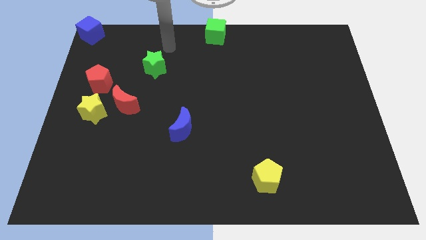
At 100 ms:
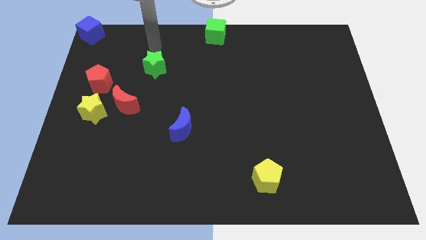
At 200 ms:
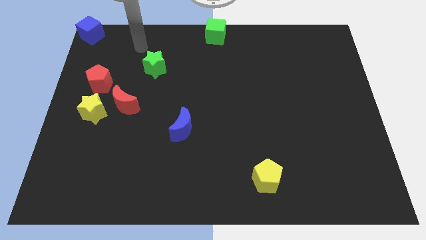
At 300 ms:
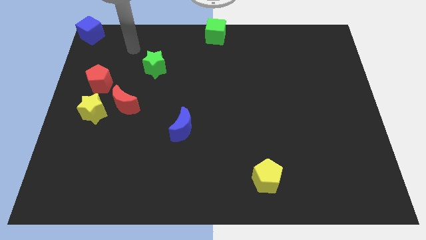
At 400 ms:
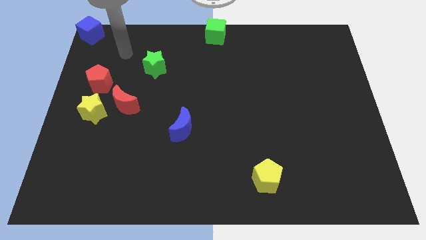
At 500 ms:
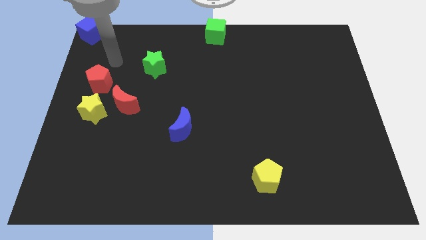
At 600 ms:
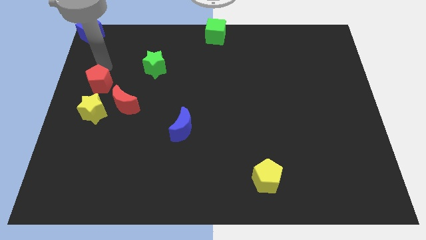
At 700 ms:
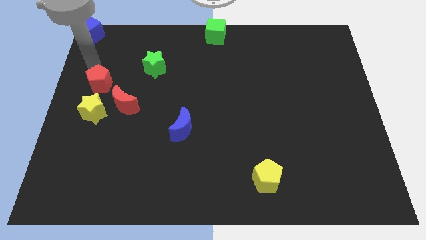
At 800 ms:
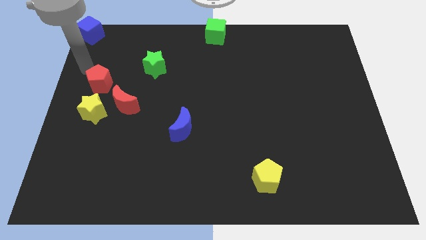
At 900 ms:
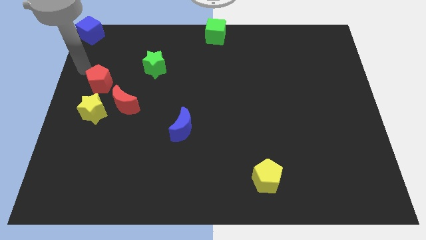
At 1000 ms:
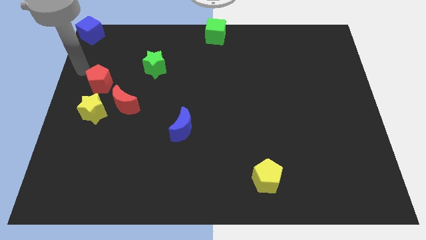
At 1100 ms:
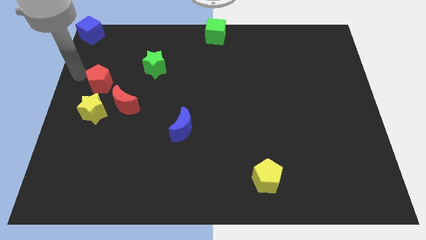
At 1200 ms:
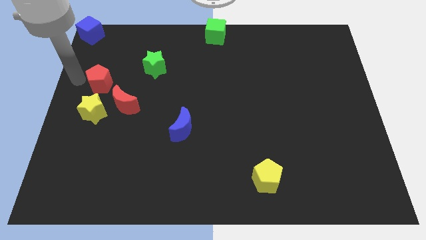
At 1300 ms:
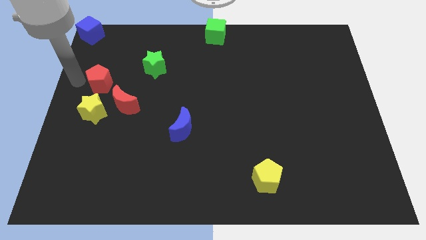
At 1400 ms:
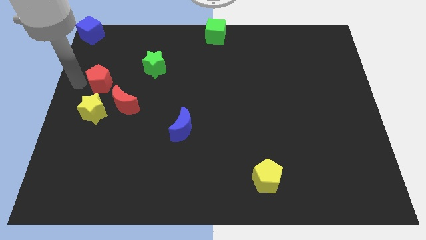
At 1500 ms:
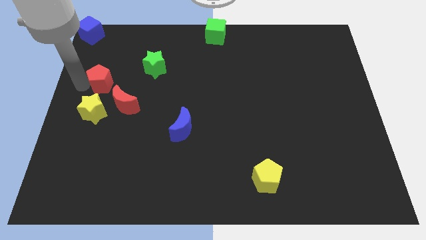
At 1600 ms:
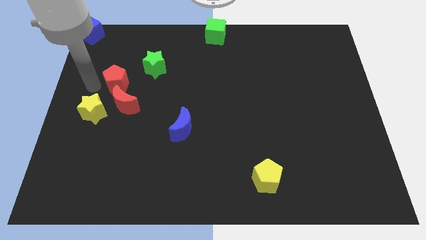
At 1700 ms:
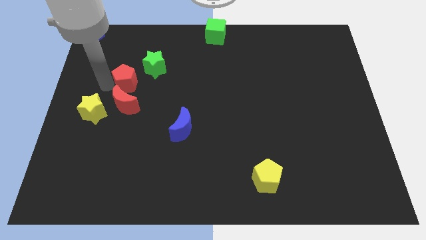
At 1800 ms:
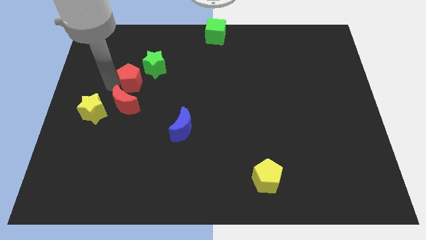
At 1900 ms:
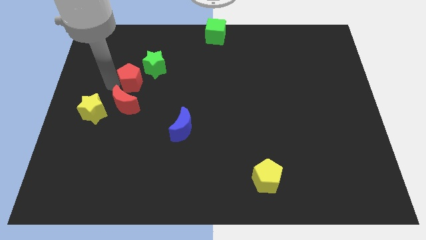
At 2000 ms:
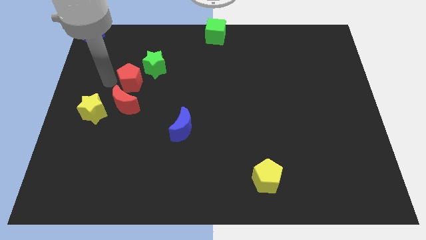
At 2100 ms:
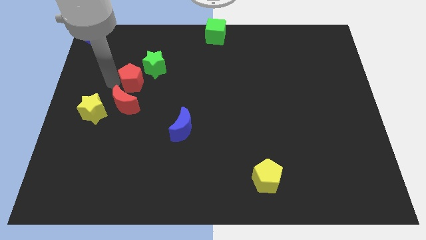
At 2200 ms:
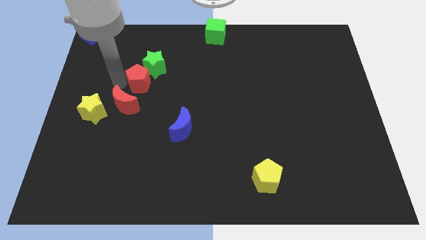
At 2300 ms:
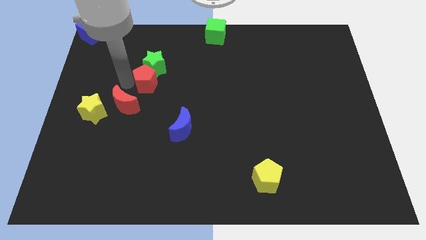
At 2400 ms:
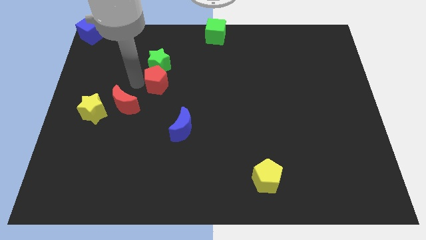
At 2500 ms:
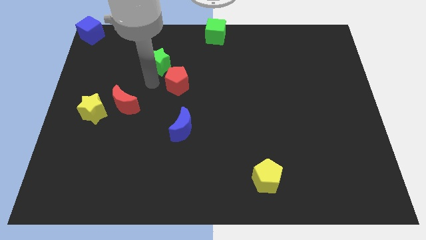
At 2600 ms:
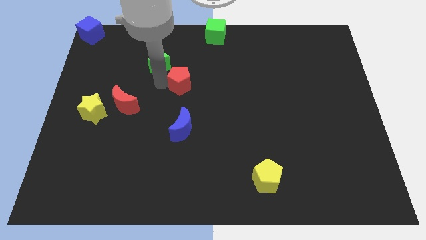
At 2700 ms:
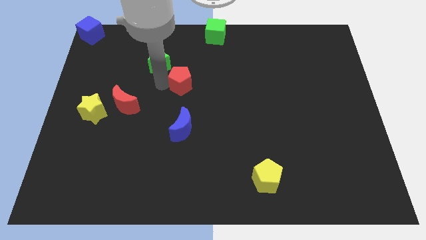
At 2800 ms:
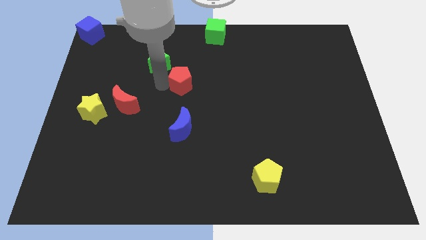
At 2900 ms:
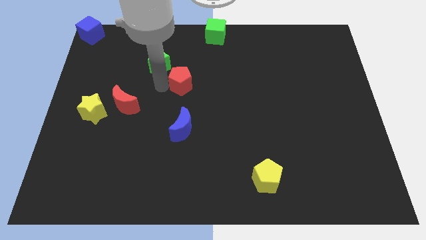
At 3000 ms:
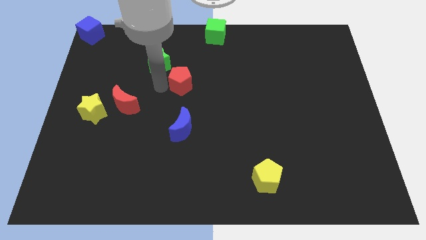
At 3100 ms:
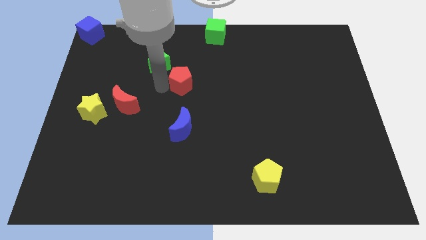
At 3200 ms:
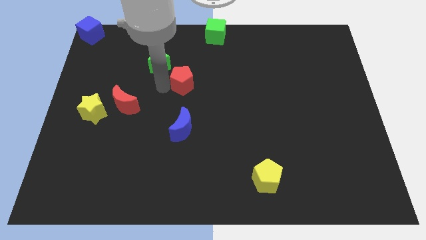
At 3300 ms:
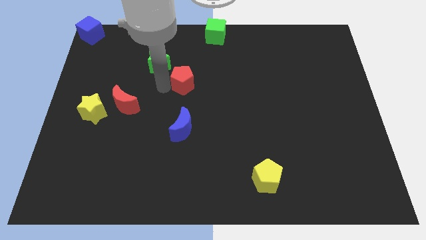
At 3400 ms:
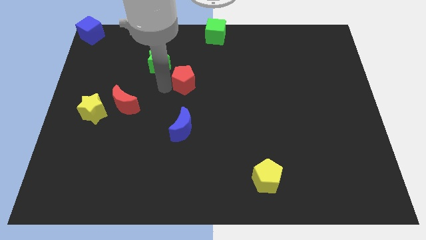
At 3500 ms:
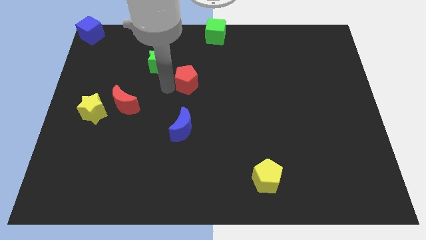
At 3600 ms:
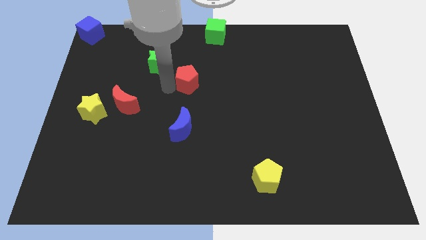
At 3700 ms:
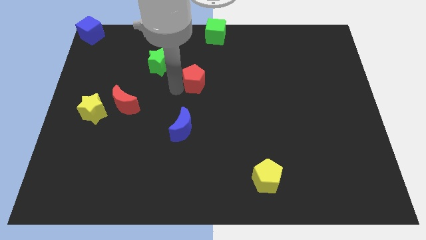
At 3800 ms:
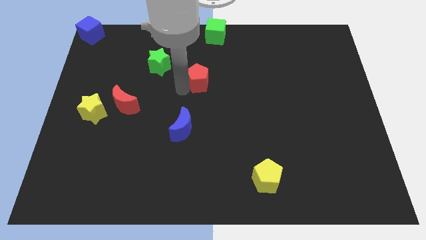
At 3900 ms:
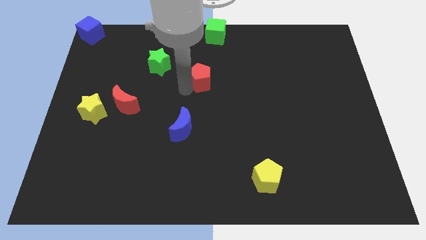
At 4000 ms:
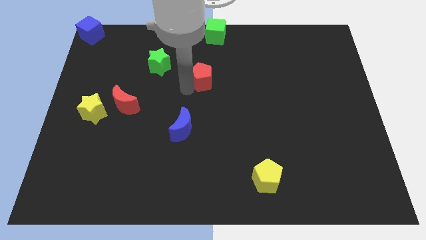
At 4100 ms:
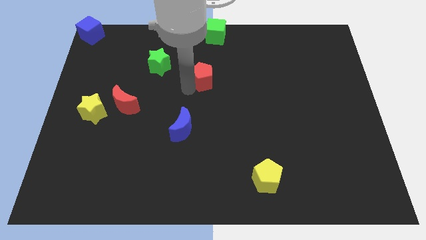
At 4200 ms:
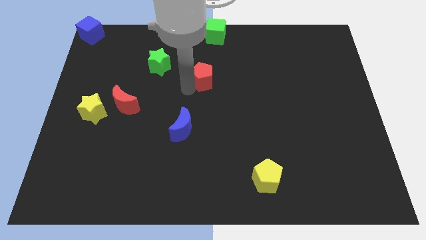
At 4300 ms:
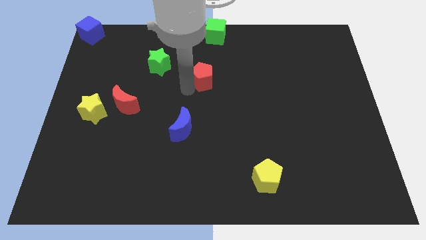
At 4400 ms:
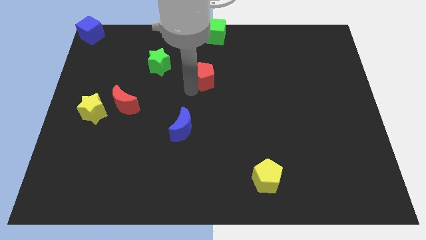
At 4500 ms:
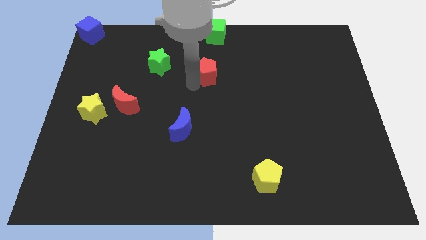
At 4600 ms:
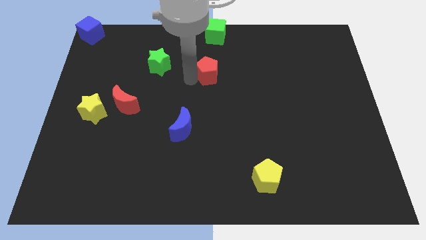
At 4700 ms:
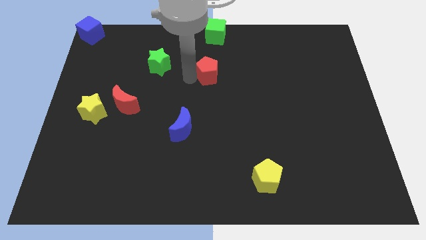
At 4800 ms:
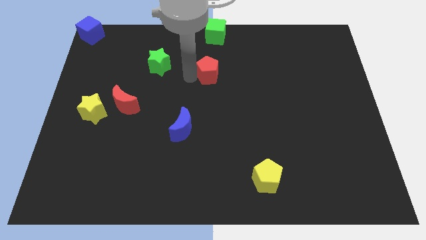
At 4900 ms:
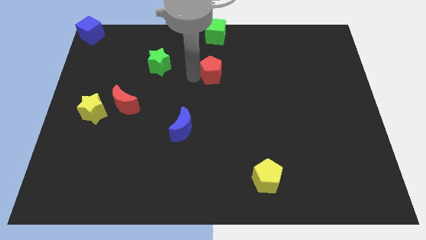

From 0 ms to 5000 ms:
push the red pentagon below the green cube

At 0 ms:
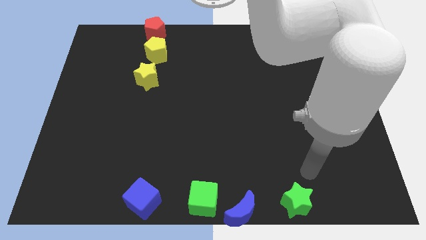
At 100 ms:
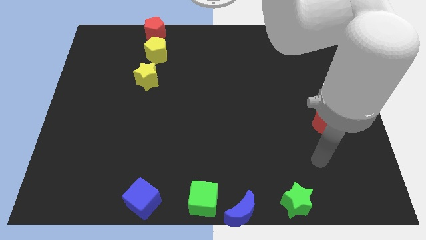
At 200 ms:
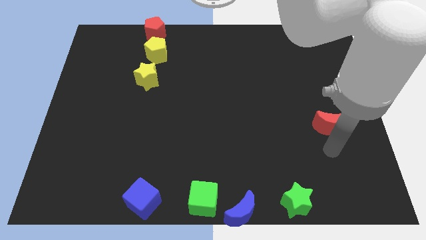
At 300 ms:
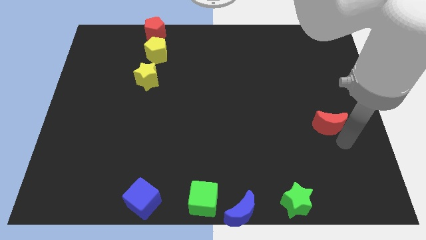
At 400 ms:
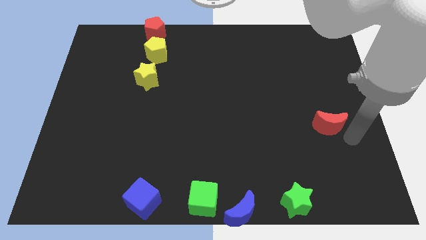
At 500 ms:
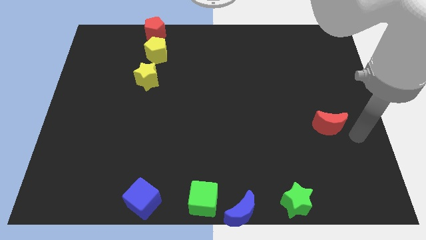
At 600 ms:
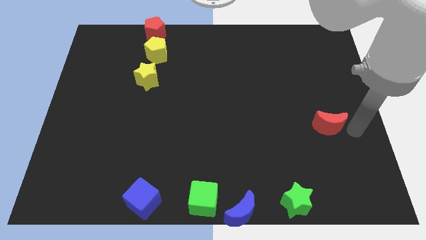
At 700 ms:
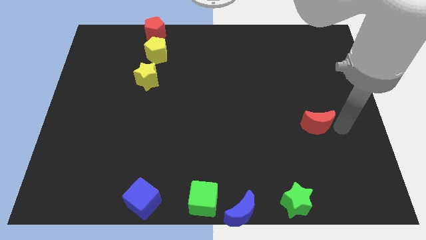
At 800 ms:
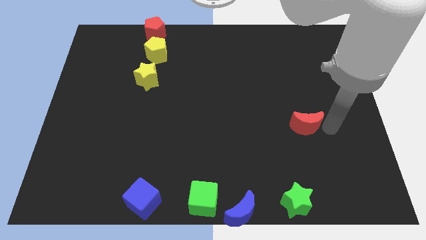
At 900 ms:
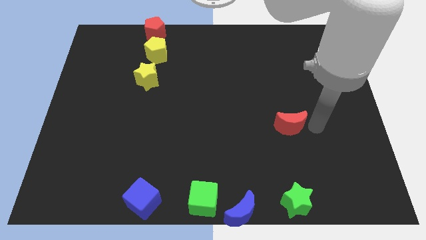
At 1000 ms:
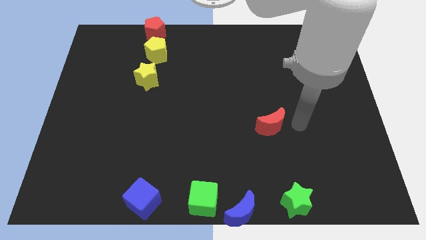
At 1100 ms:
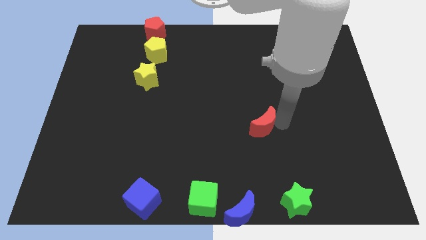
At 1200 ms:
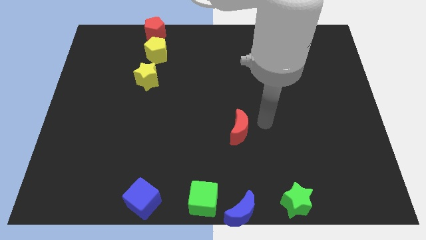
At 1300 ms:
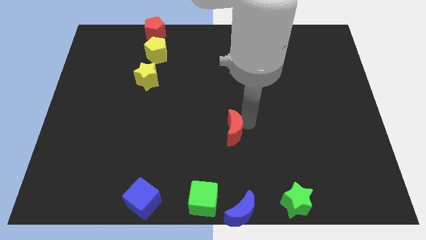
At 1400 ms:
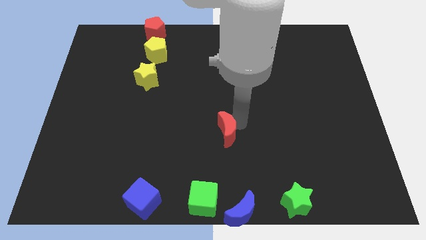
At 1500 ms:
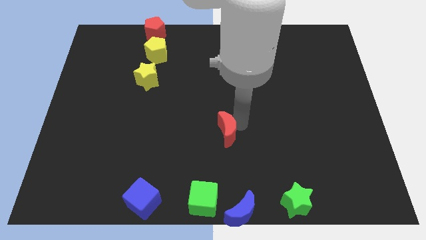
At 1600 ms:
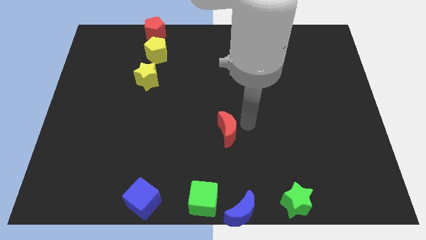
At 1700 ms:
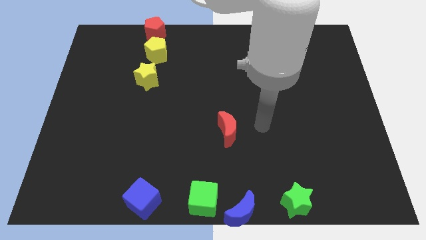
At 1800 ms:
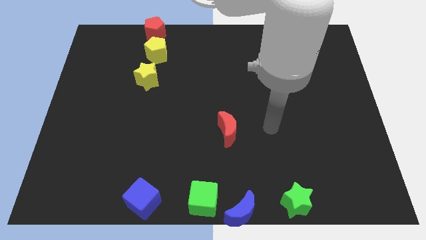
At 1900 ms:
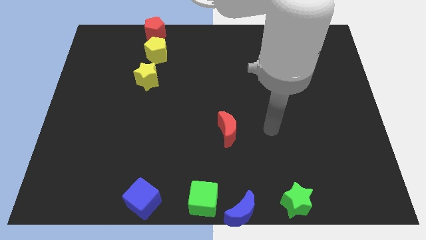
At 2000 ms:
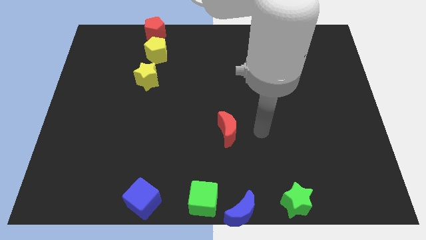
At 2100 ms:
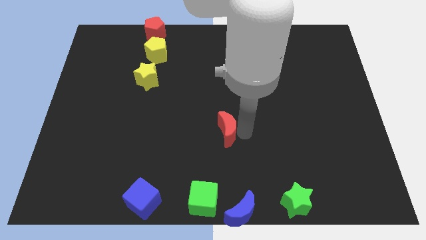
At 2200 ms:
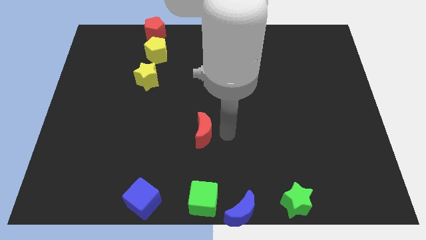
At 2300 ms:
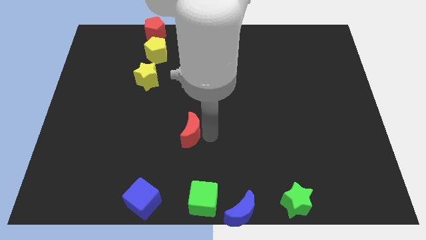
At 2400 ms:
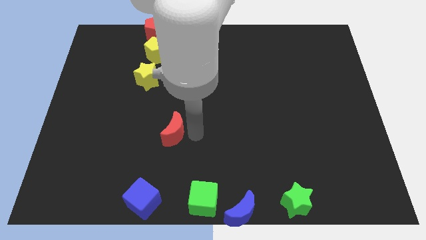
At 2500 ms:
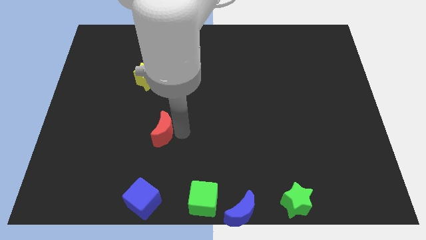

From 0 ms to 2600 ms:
move the red crescent above the blue cube

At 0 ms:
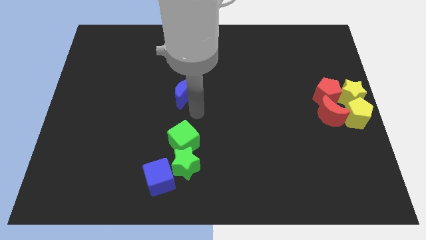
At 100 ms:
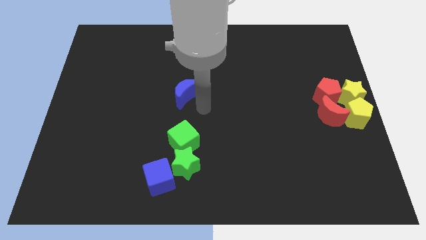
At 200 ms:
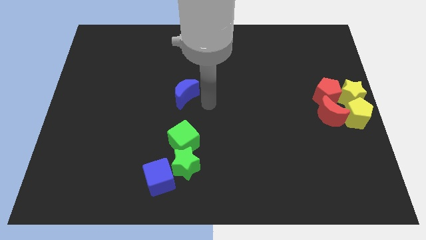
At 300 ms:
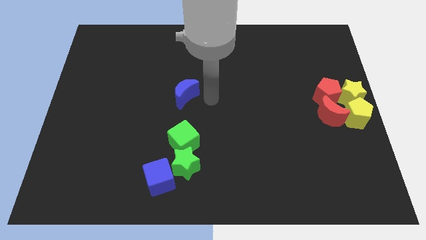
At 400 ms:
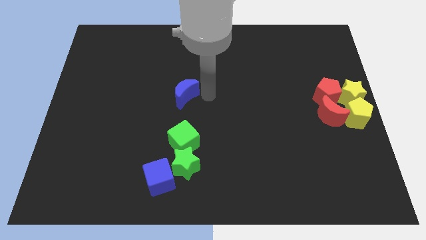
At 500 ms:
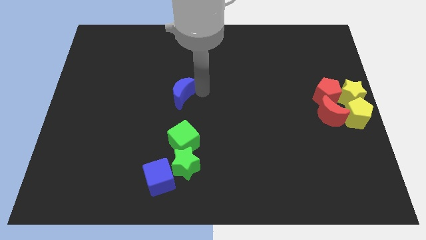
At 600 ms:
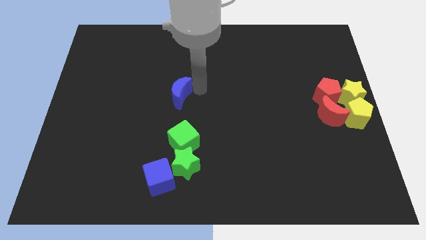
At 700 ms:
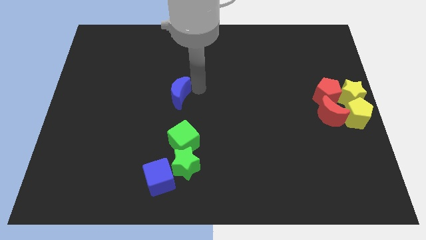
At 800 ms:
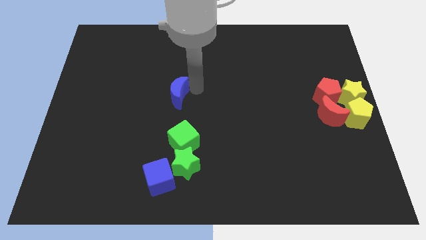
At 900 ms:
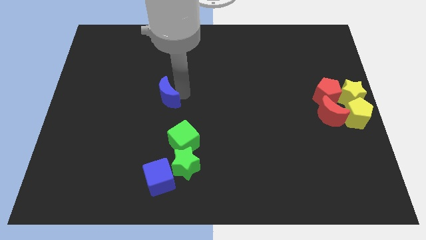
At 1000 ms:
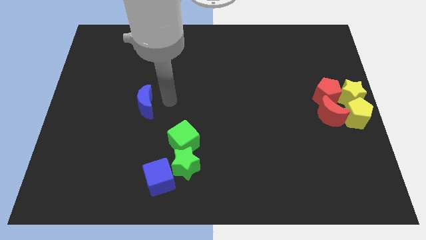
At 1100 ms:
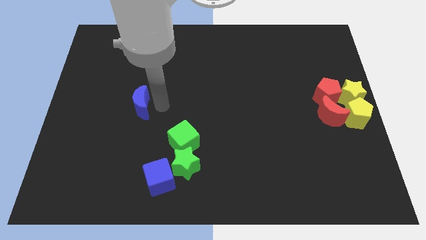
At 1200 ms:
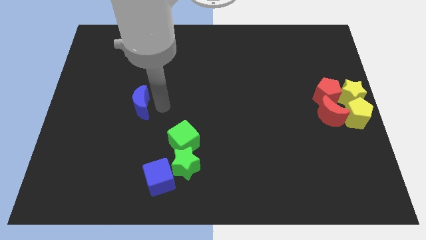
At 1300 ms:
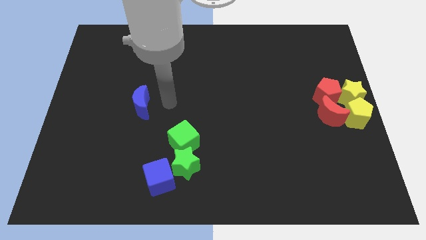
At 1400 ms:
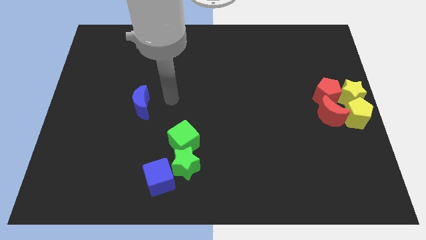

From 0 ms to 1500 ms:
drag the blue crescent diagonally top left to the green cube
